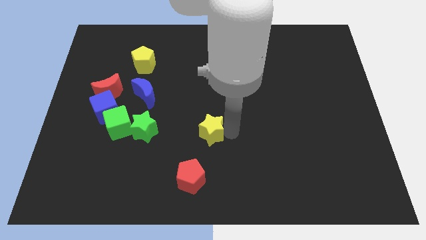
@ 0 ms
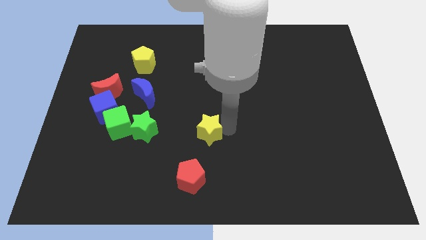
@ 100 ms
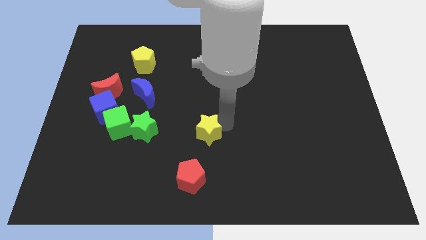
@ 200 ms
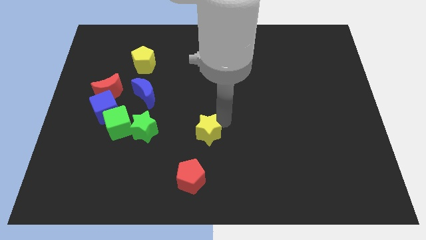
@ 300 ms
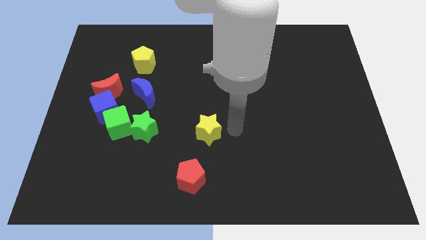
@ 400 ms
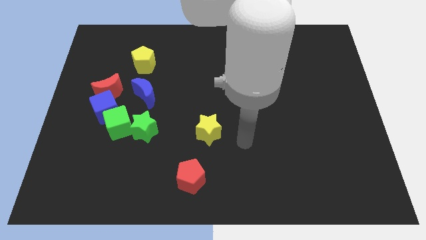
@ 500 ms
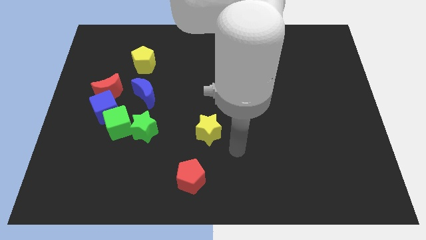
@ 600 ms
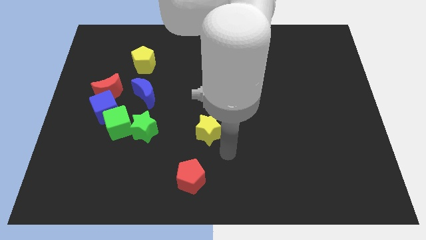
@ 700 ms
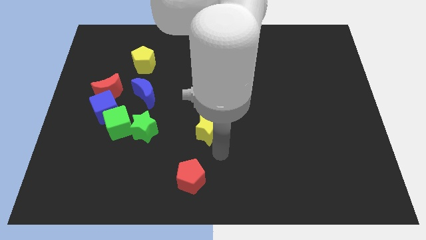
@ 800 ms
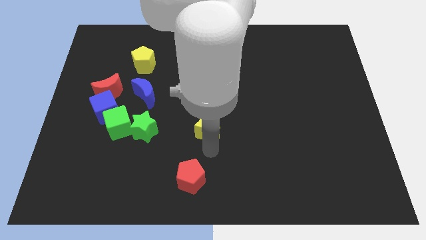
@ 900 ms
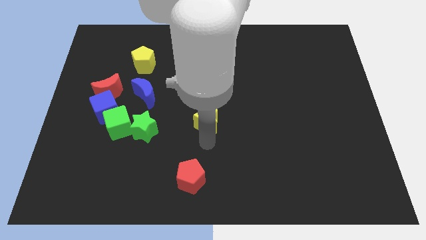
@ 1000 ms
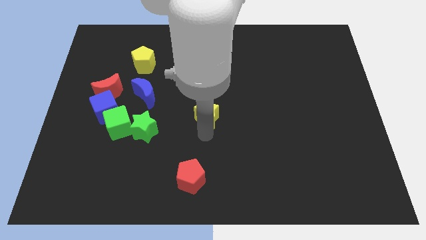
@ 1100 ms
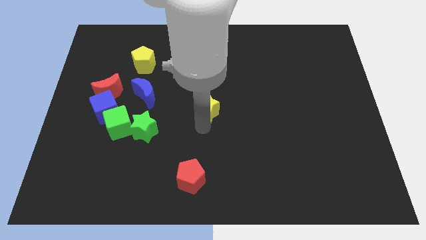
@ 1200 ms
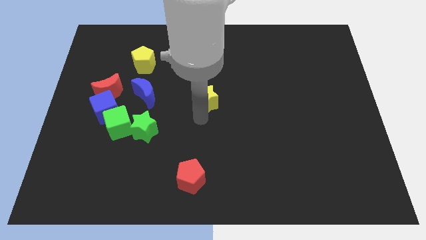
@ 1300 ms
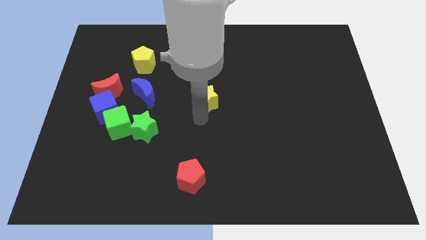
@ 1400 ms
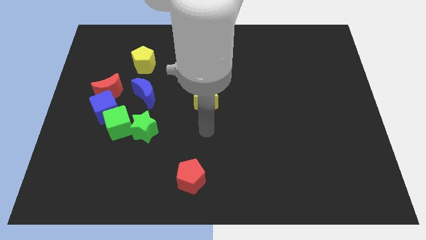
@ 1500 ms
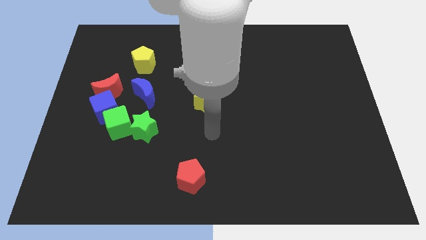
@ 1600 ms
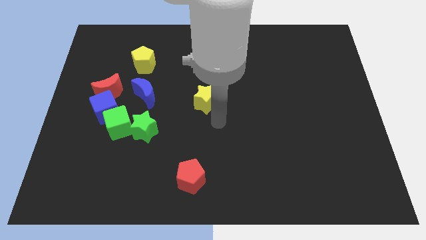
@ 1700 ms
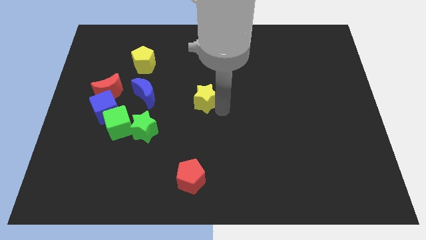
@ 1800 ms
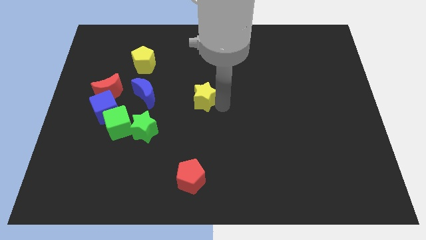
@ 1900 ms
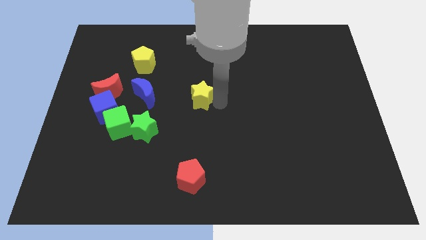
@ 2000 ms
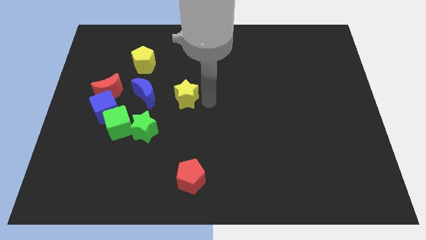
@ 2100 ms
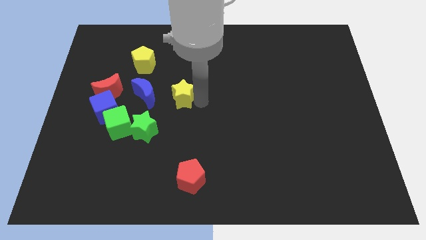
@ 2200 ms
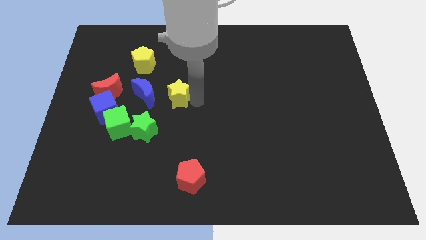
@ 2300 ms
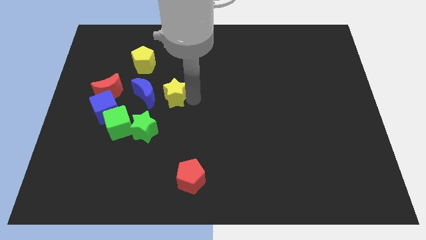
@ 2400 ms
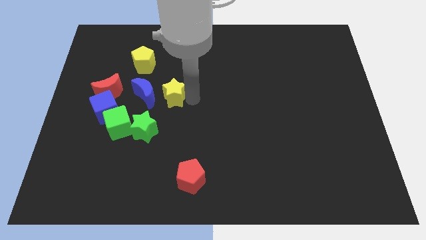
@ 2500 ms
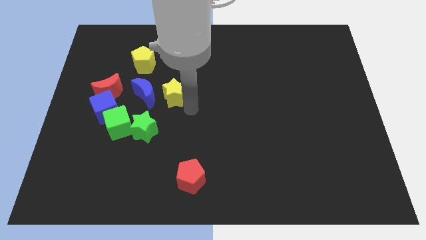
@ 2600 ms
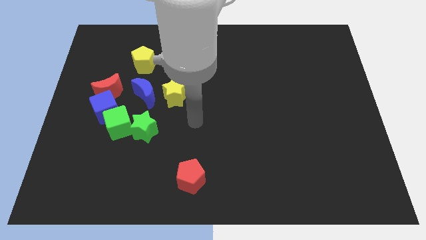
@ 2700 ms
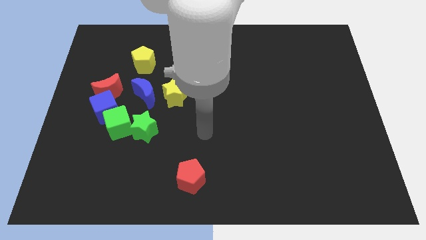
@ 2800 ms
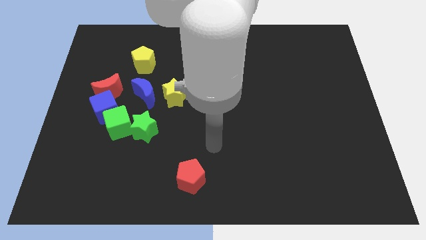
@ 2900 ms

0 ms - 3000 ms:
move yellow star right beside the blue moon

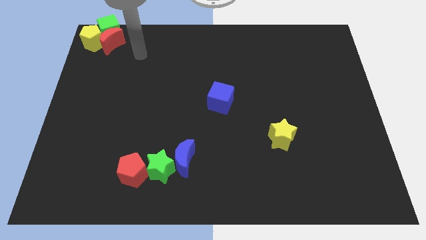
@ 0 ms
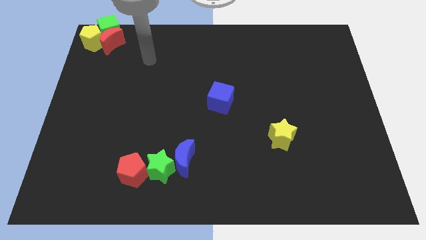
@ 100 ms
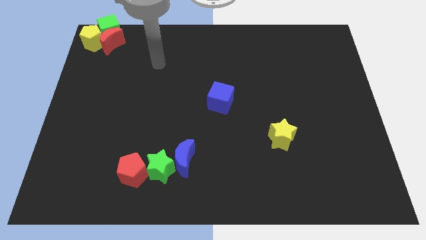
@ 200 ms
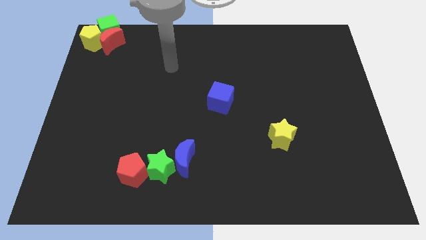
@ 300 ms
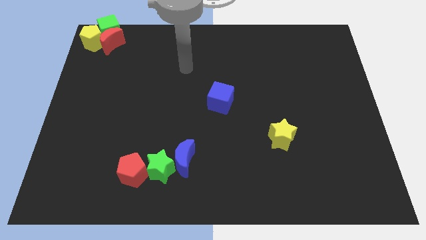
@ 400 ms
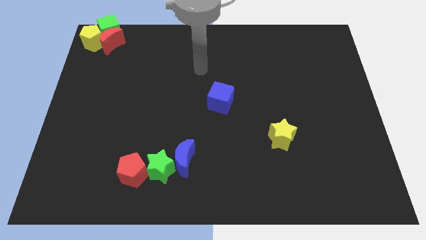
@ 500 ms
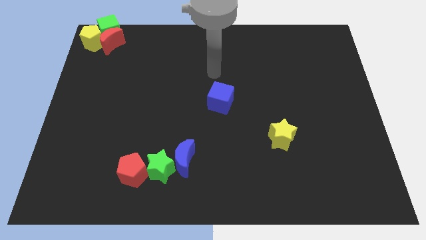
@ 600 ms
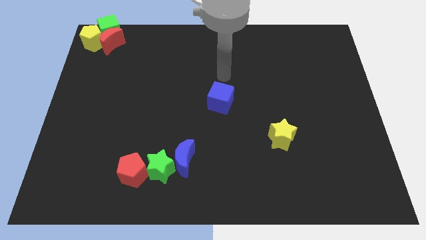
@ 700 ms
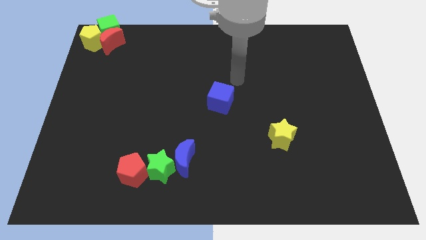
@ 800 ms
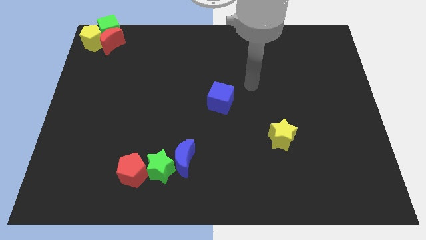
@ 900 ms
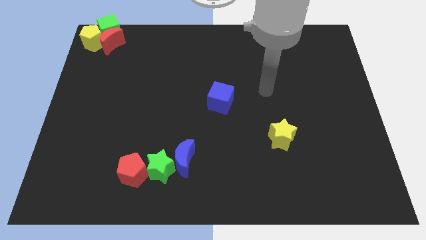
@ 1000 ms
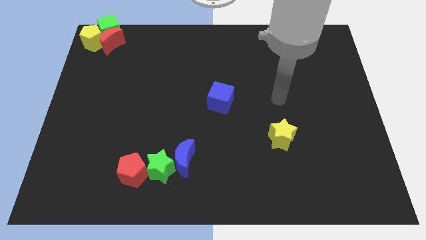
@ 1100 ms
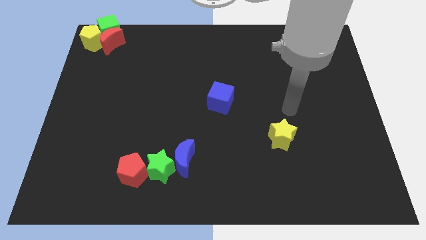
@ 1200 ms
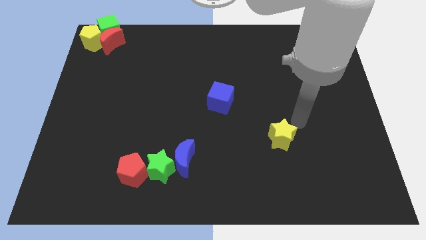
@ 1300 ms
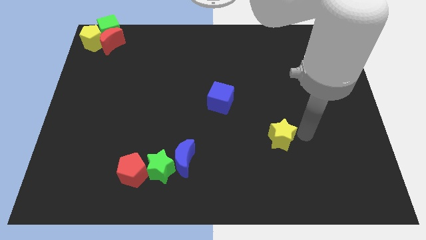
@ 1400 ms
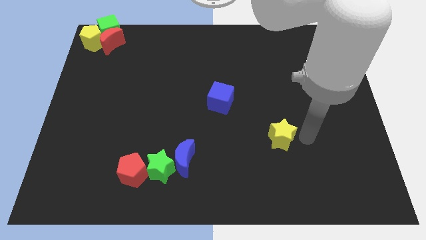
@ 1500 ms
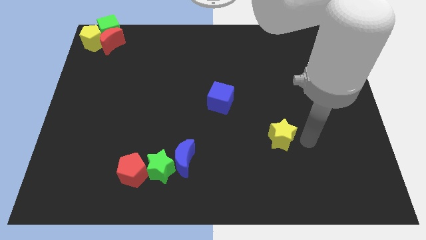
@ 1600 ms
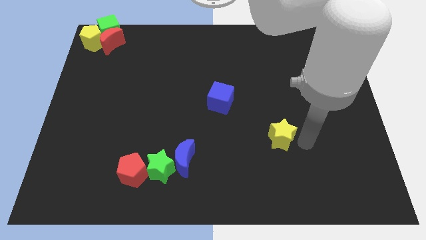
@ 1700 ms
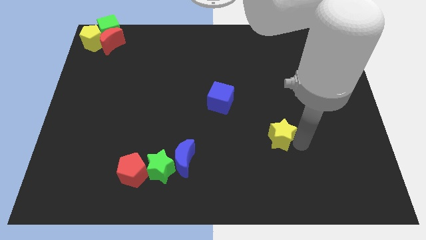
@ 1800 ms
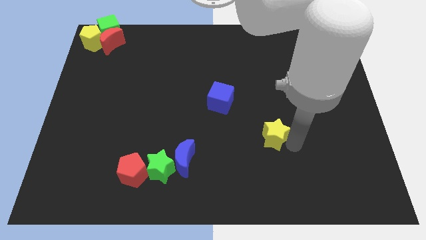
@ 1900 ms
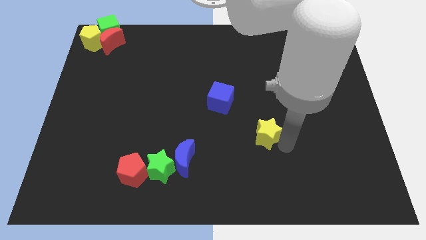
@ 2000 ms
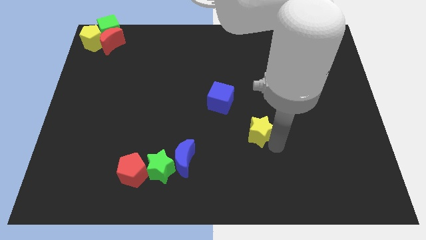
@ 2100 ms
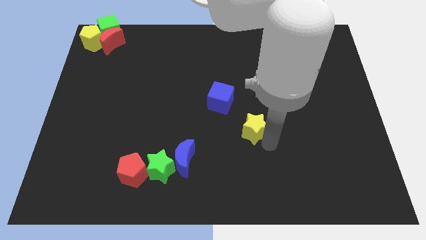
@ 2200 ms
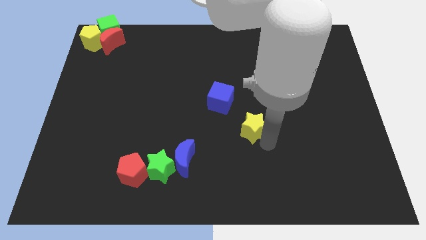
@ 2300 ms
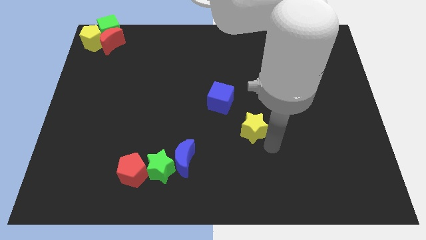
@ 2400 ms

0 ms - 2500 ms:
push the yellow star diagonal to blue cube

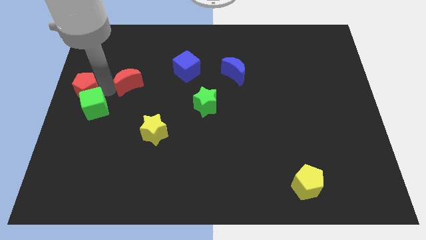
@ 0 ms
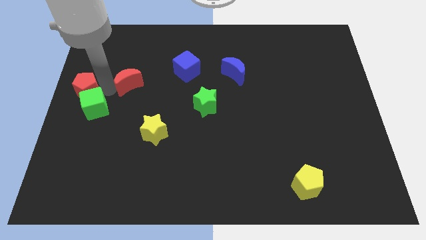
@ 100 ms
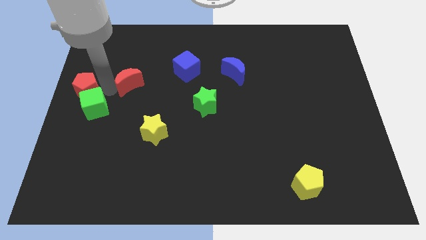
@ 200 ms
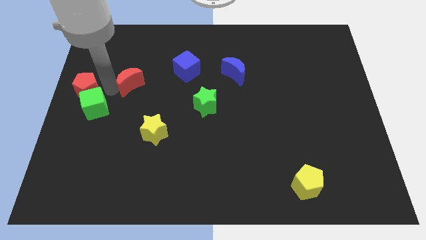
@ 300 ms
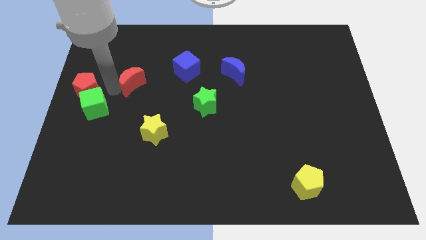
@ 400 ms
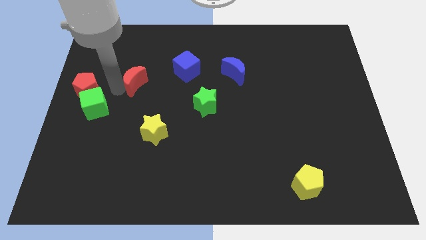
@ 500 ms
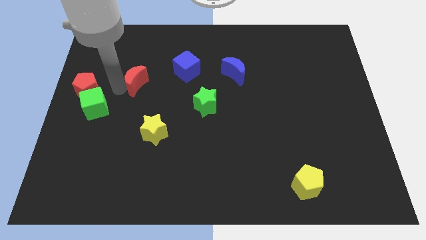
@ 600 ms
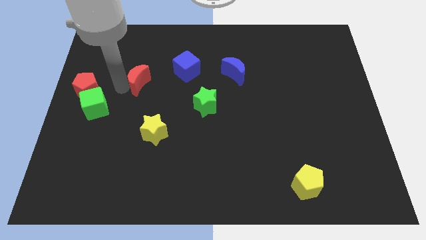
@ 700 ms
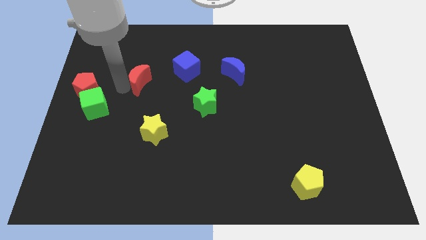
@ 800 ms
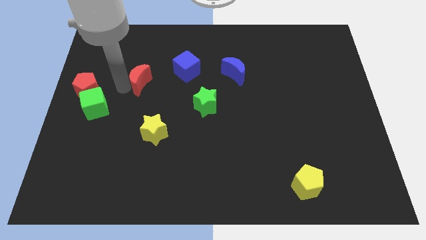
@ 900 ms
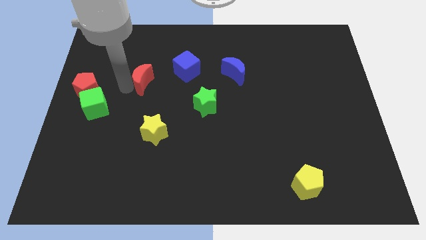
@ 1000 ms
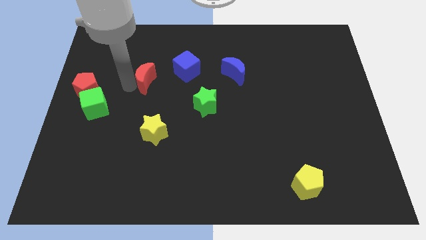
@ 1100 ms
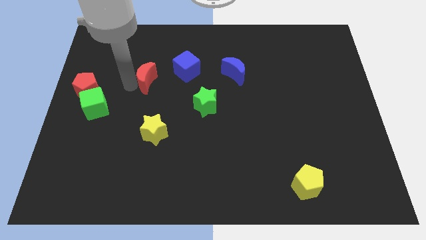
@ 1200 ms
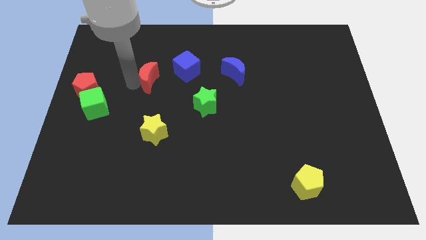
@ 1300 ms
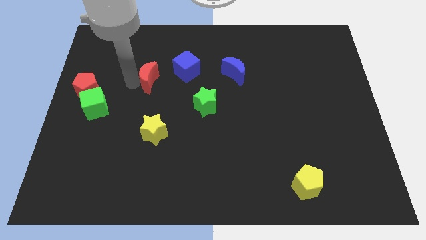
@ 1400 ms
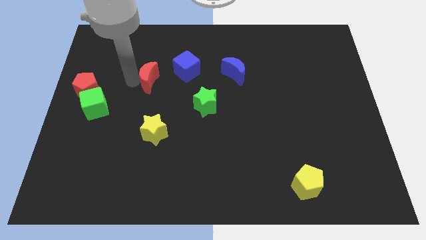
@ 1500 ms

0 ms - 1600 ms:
place red crescent in between the red pentagan and the blue cube

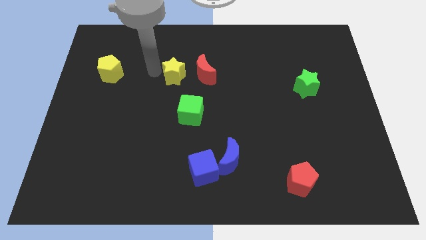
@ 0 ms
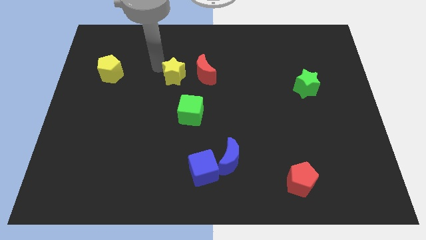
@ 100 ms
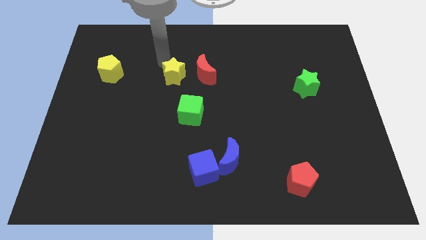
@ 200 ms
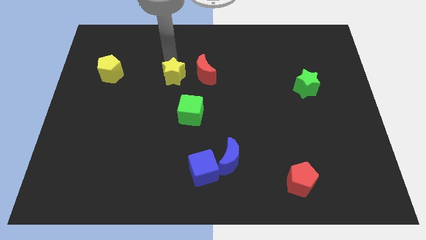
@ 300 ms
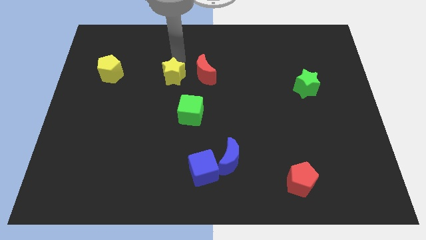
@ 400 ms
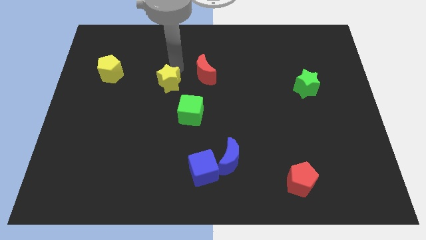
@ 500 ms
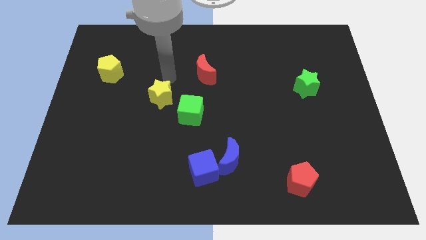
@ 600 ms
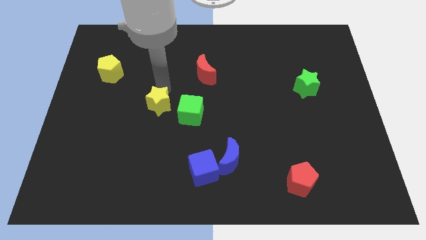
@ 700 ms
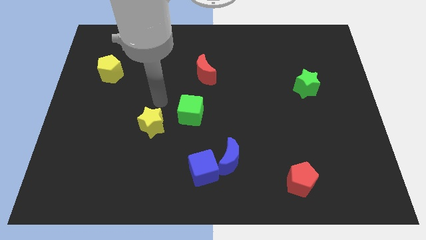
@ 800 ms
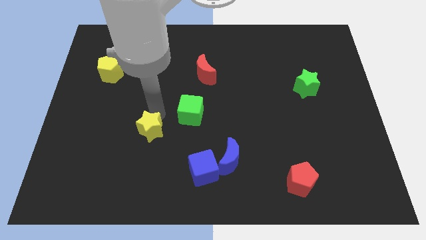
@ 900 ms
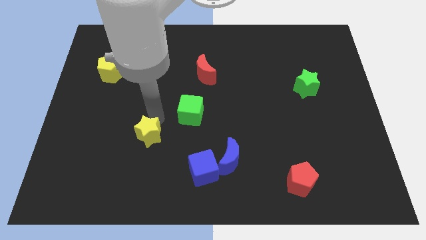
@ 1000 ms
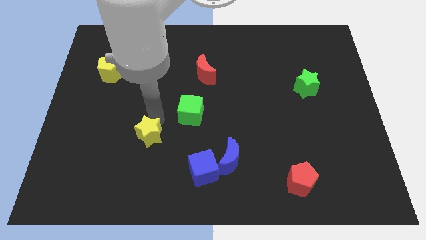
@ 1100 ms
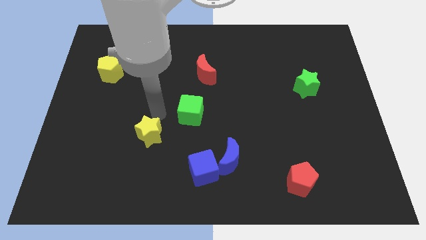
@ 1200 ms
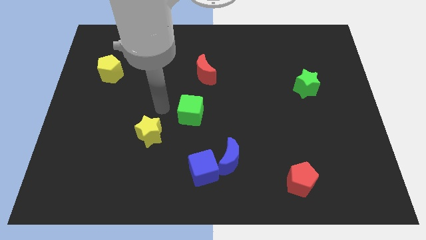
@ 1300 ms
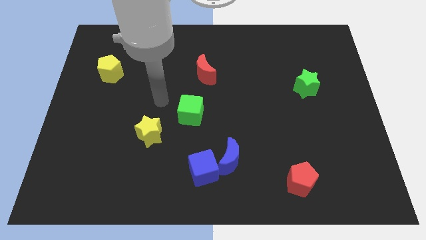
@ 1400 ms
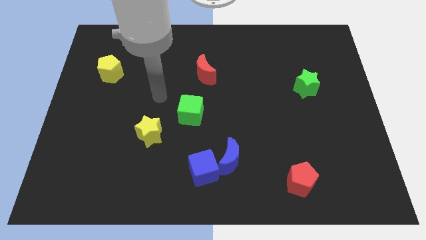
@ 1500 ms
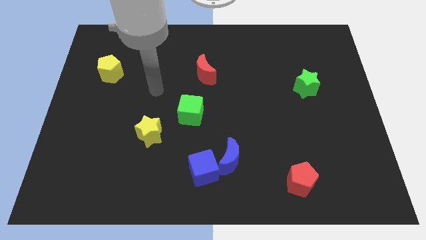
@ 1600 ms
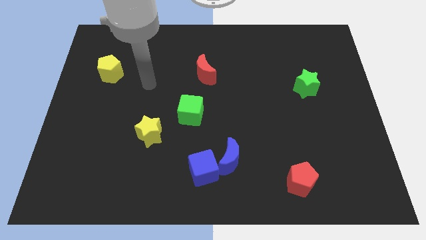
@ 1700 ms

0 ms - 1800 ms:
place the yellow star diagonal to the green cube

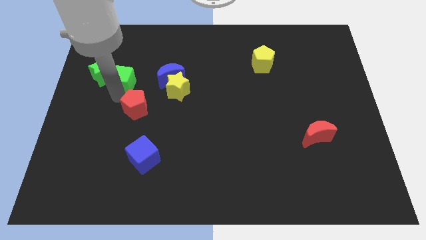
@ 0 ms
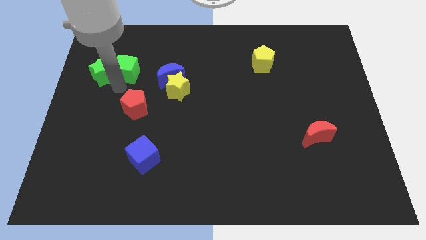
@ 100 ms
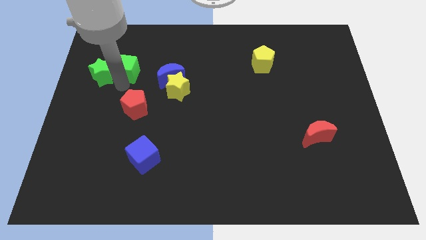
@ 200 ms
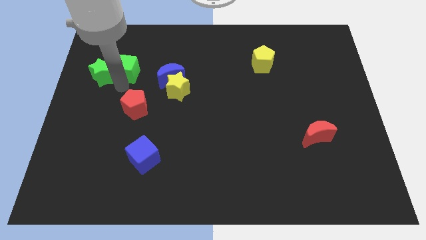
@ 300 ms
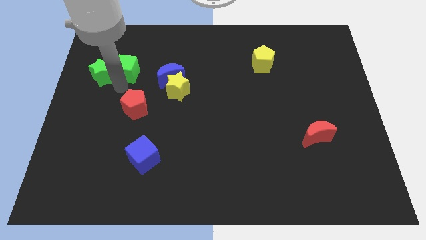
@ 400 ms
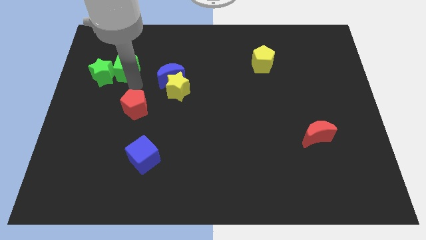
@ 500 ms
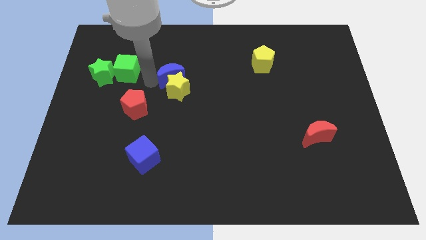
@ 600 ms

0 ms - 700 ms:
place the green cube to the right side of the green star
